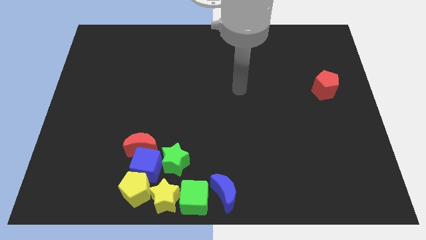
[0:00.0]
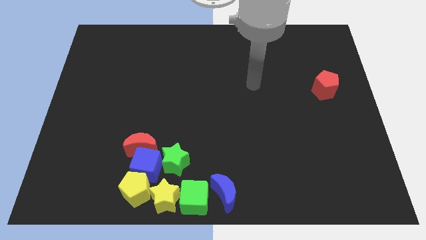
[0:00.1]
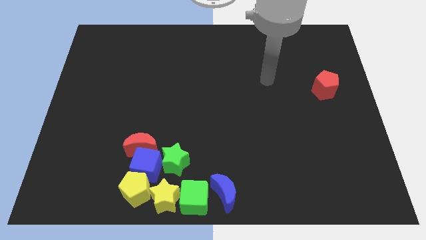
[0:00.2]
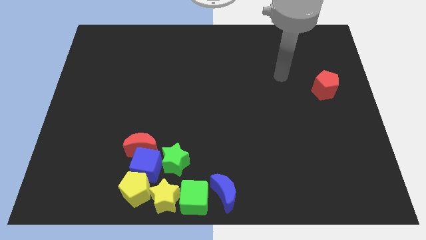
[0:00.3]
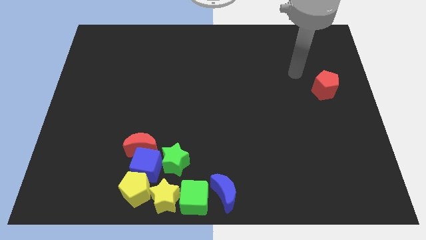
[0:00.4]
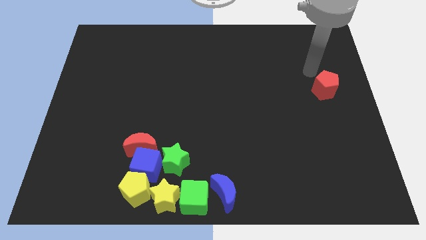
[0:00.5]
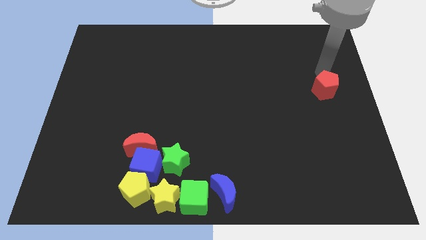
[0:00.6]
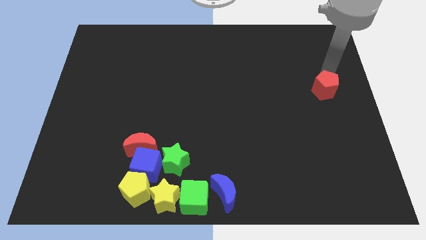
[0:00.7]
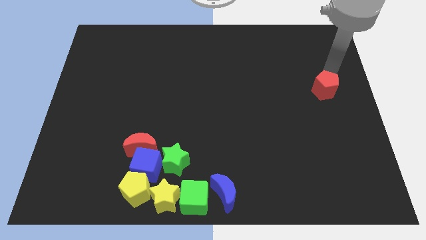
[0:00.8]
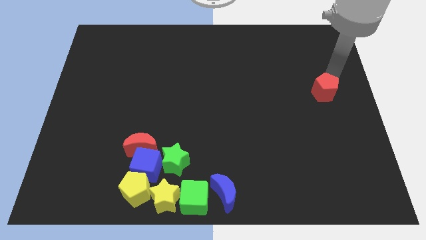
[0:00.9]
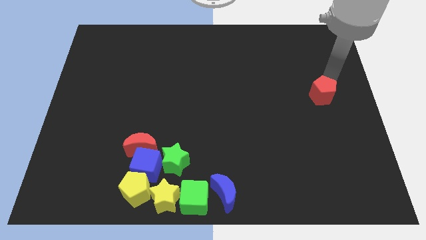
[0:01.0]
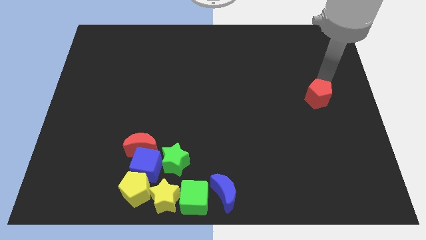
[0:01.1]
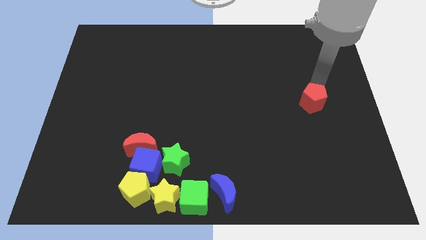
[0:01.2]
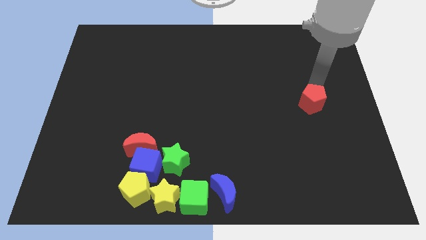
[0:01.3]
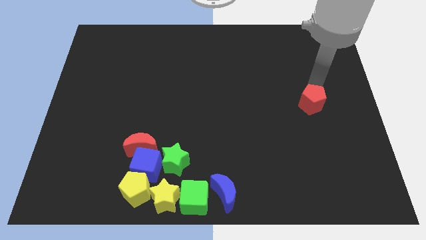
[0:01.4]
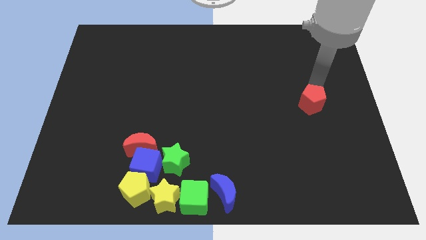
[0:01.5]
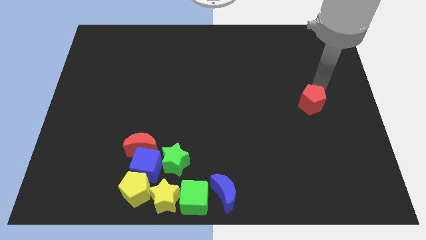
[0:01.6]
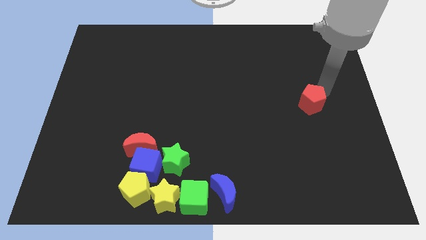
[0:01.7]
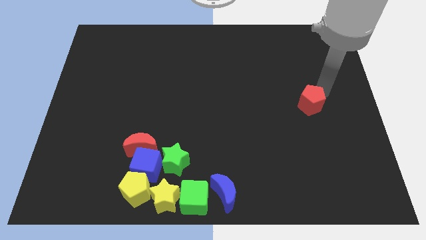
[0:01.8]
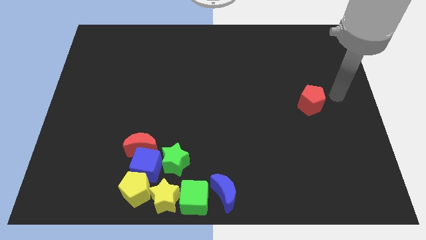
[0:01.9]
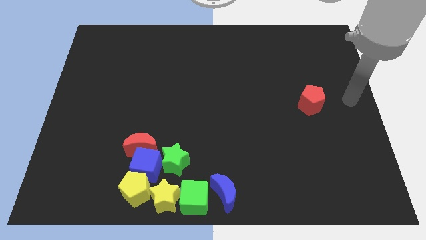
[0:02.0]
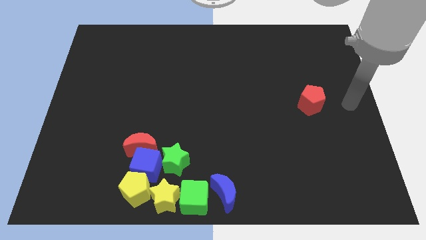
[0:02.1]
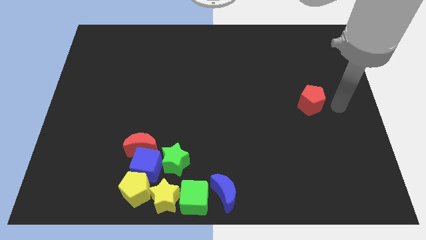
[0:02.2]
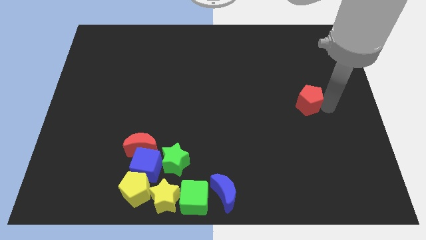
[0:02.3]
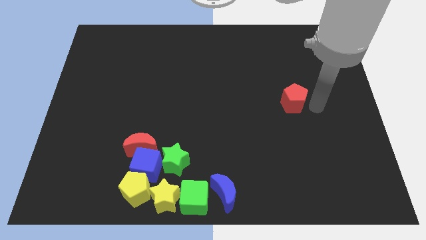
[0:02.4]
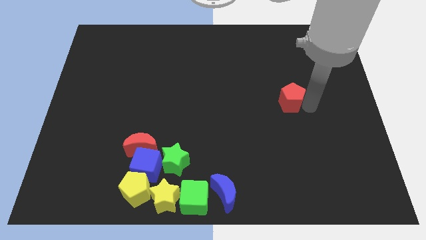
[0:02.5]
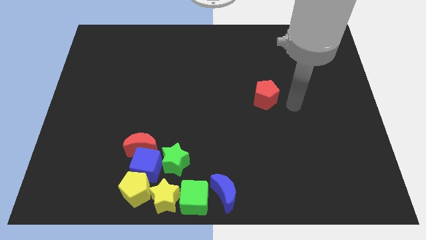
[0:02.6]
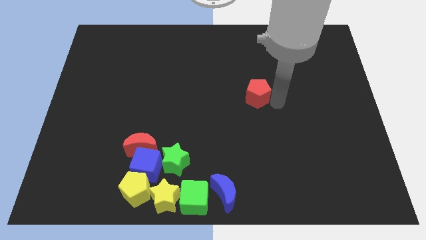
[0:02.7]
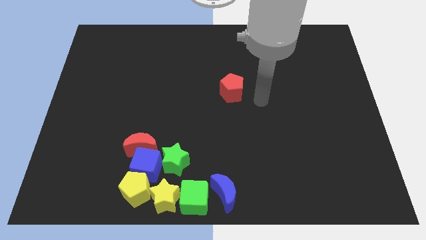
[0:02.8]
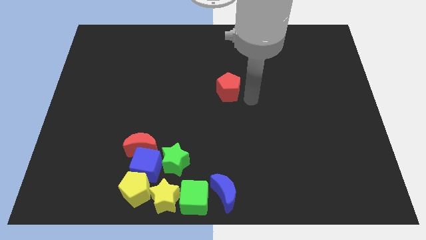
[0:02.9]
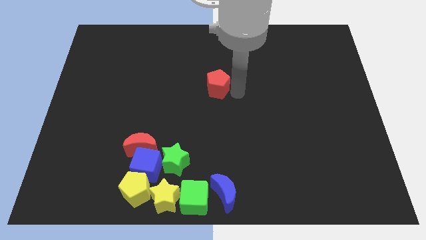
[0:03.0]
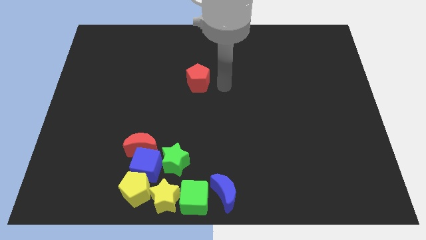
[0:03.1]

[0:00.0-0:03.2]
move the red pentagon to the center of the board

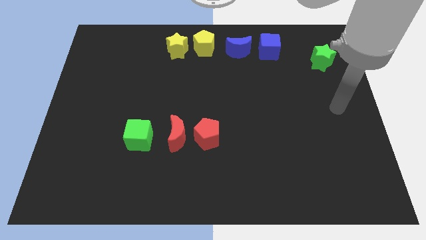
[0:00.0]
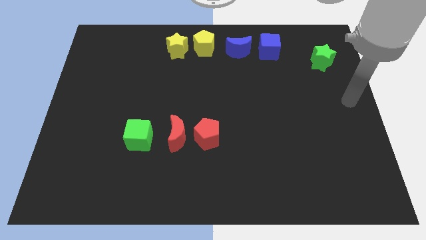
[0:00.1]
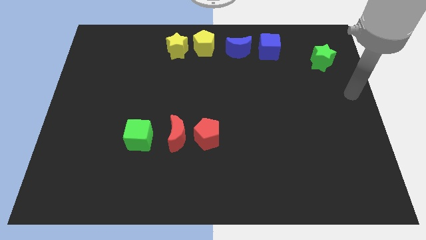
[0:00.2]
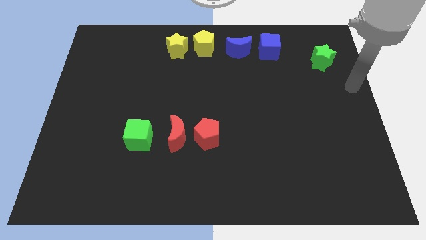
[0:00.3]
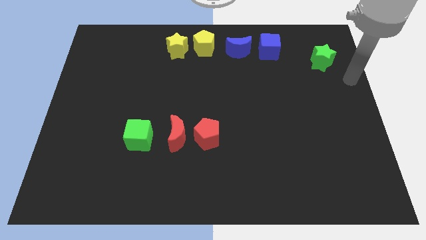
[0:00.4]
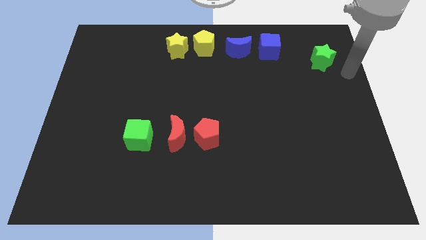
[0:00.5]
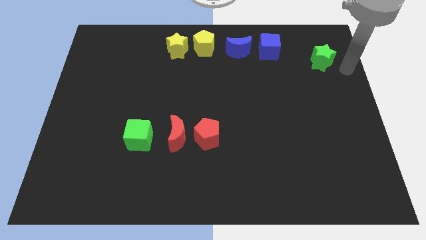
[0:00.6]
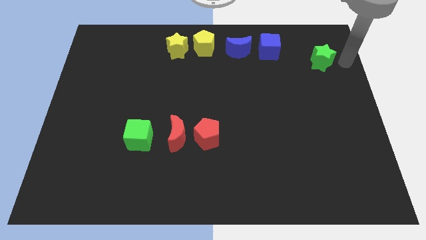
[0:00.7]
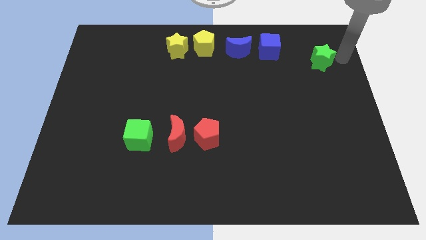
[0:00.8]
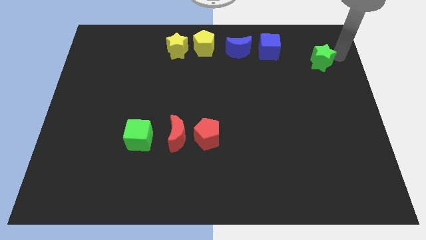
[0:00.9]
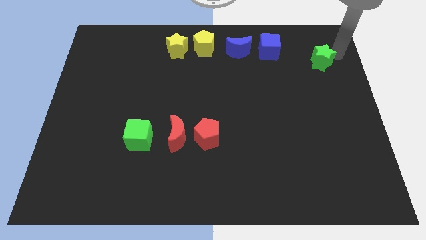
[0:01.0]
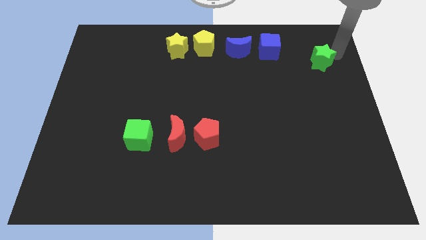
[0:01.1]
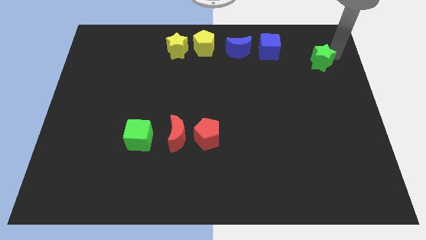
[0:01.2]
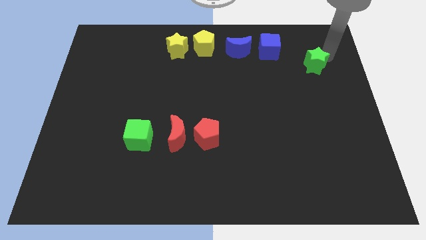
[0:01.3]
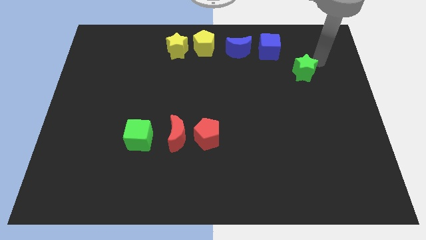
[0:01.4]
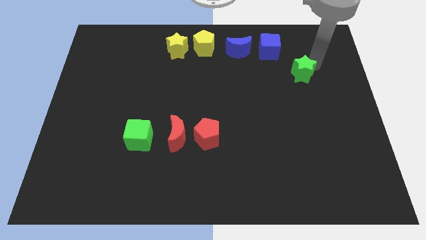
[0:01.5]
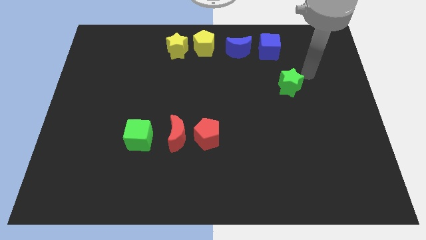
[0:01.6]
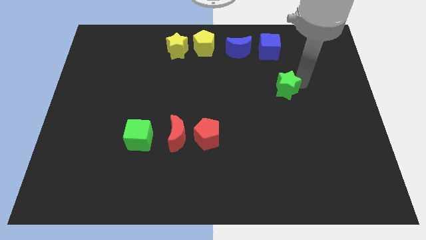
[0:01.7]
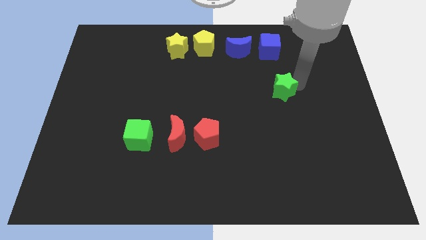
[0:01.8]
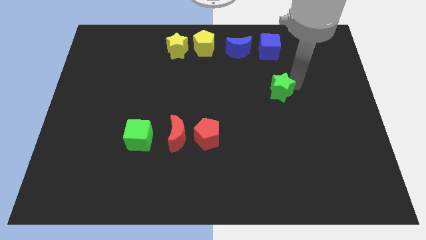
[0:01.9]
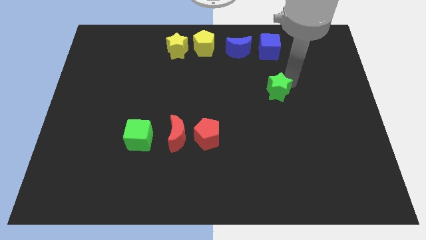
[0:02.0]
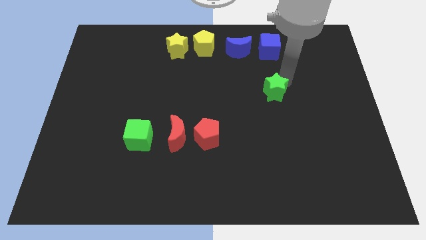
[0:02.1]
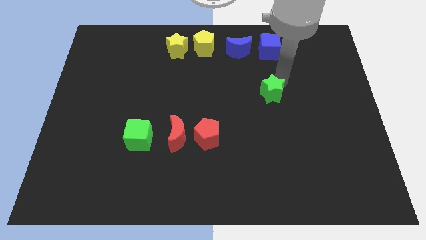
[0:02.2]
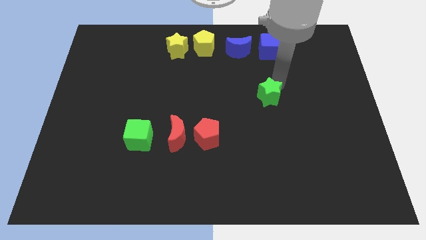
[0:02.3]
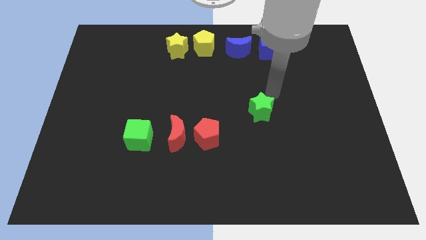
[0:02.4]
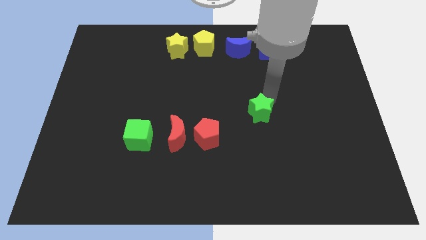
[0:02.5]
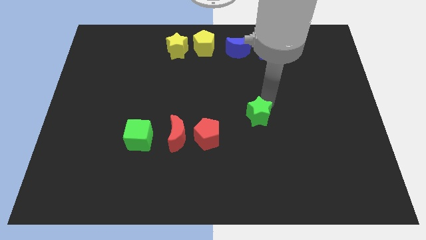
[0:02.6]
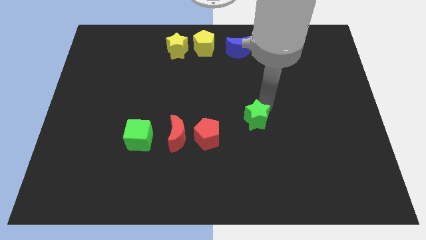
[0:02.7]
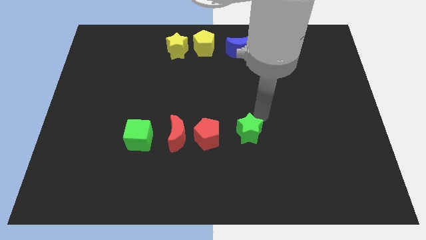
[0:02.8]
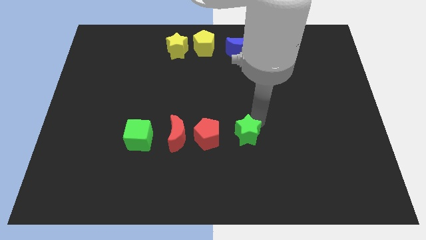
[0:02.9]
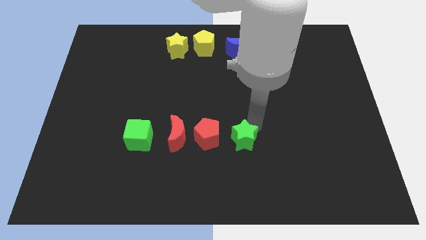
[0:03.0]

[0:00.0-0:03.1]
move the green star right to the red pentagon

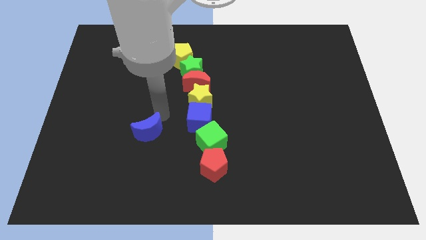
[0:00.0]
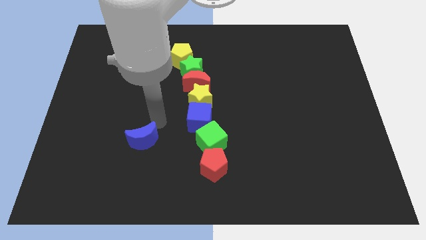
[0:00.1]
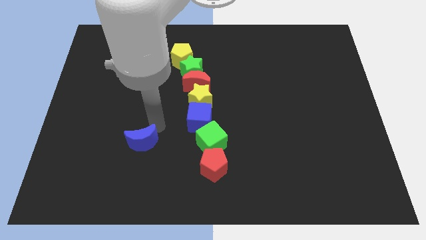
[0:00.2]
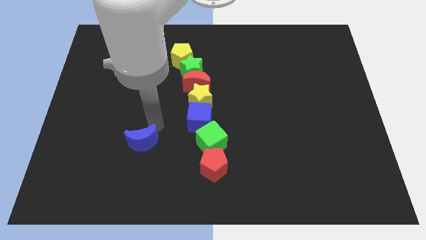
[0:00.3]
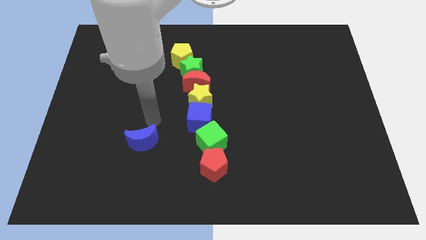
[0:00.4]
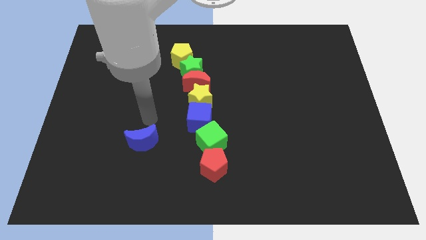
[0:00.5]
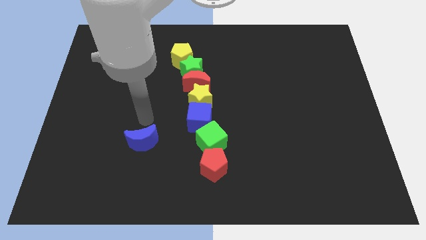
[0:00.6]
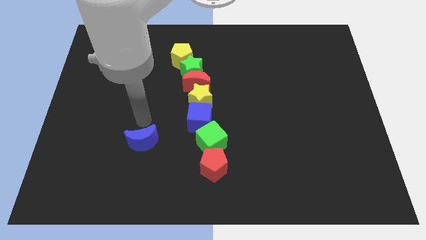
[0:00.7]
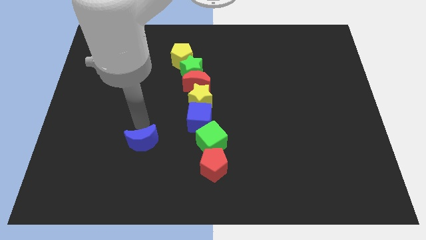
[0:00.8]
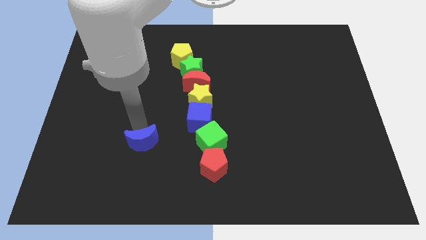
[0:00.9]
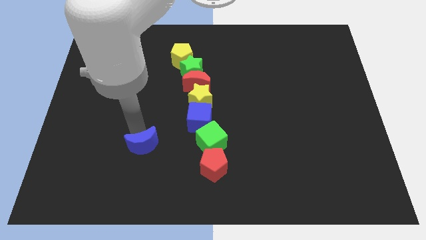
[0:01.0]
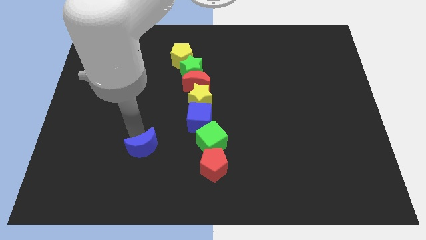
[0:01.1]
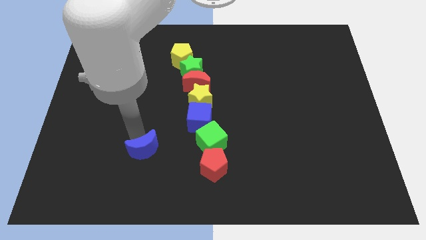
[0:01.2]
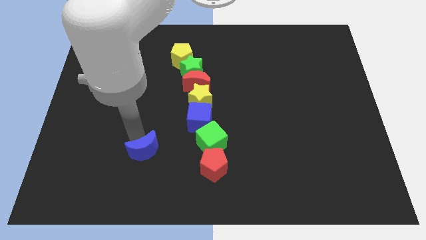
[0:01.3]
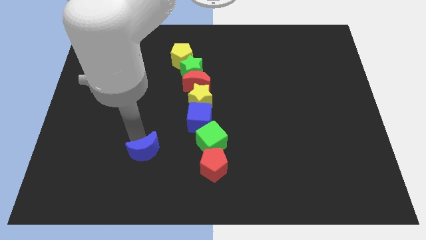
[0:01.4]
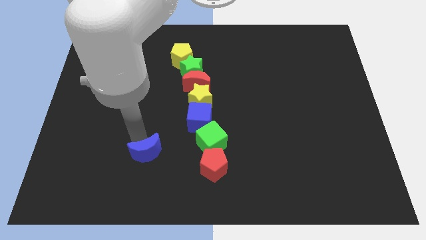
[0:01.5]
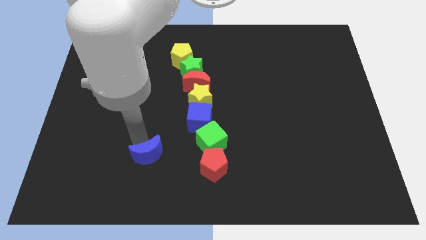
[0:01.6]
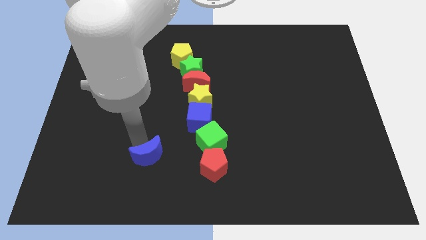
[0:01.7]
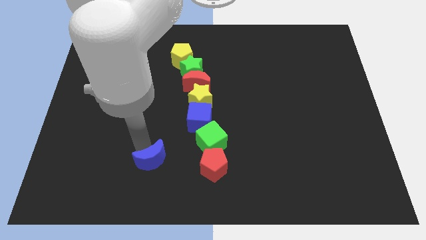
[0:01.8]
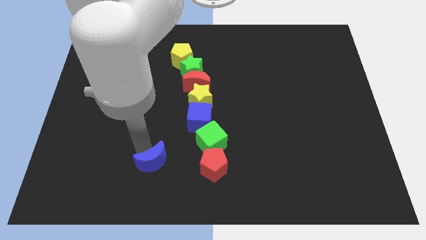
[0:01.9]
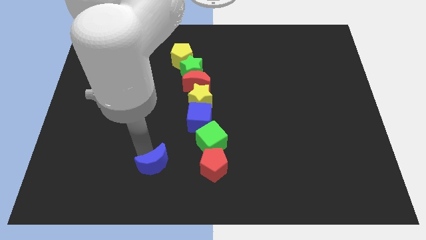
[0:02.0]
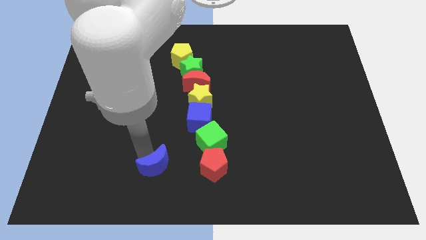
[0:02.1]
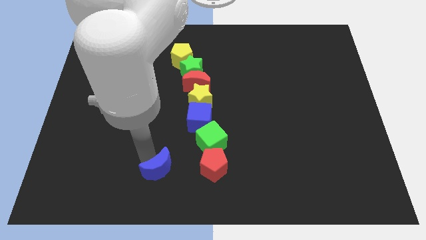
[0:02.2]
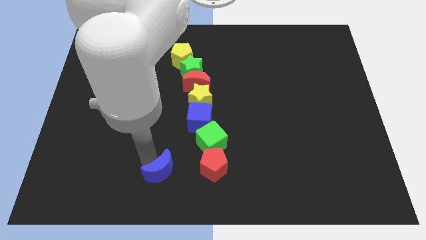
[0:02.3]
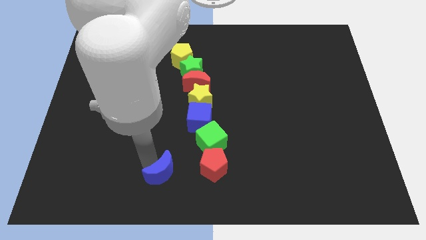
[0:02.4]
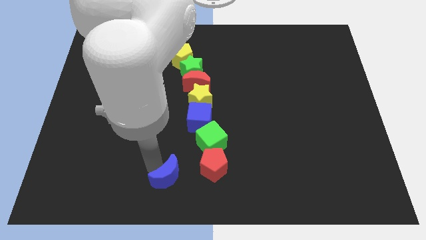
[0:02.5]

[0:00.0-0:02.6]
push the blue moon towards the bottom side of the board

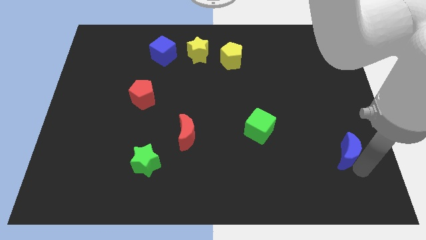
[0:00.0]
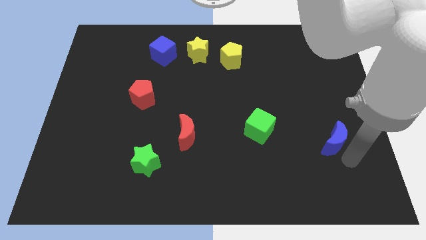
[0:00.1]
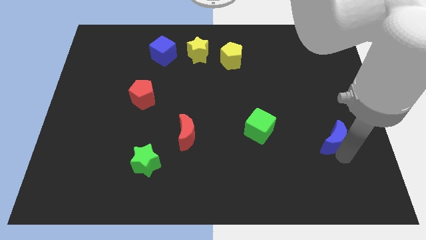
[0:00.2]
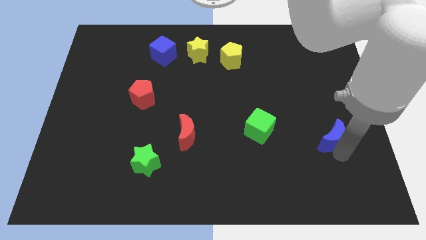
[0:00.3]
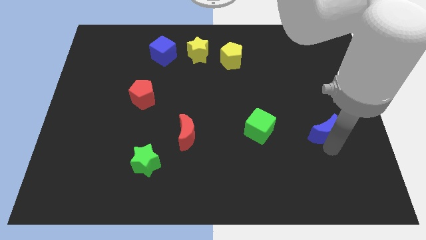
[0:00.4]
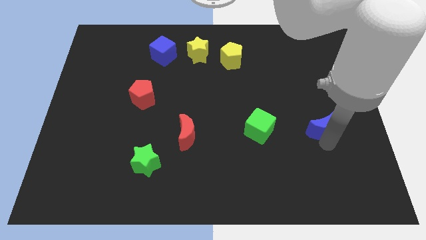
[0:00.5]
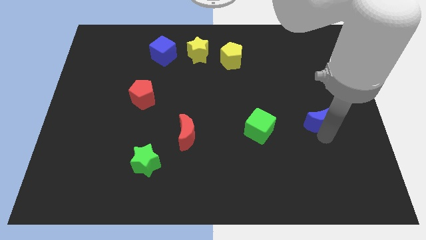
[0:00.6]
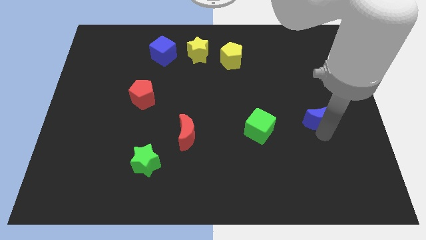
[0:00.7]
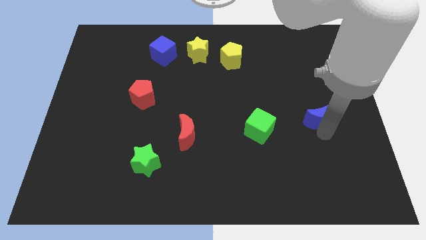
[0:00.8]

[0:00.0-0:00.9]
push blue crescent beside green cube
